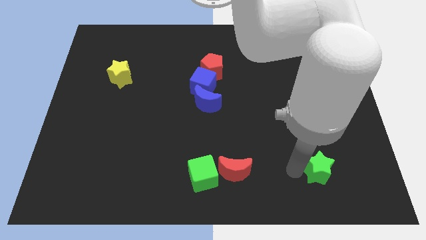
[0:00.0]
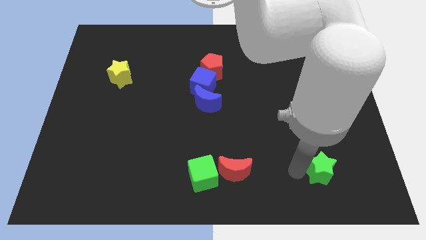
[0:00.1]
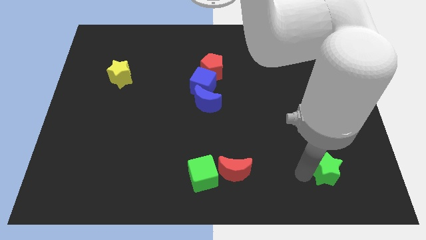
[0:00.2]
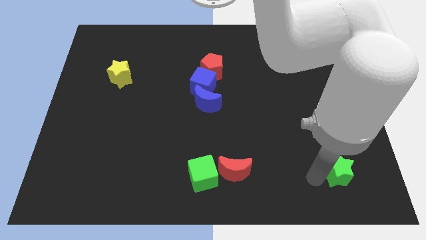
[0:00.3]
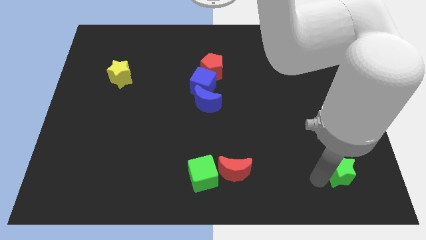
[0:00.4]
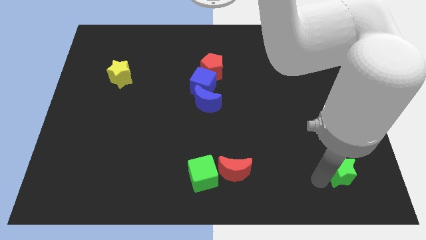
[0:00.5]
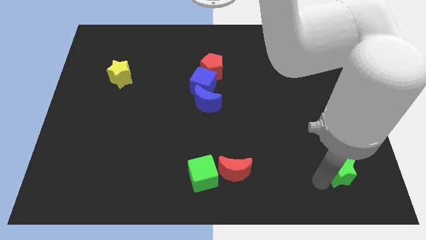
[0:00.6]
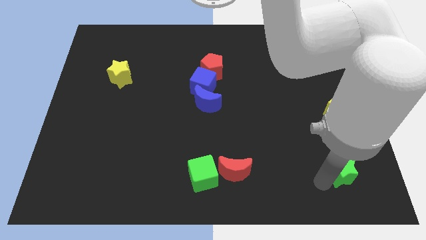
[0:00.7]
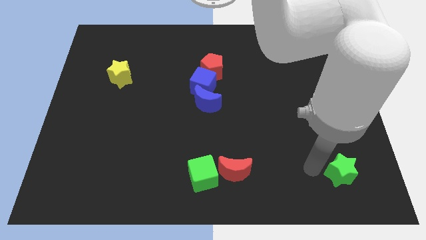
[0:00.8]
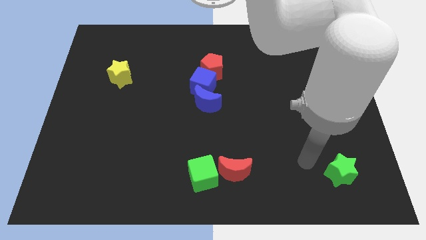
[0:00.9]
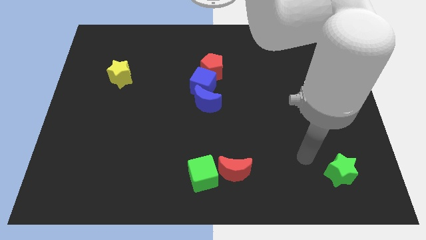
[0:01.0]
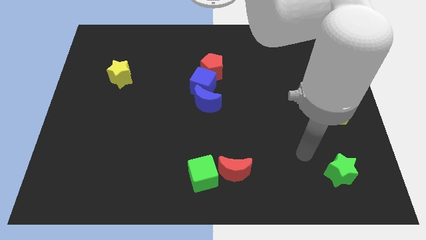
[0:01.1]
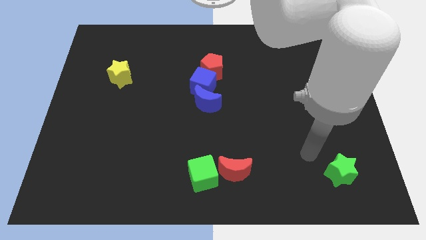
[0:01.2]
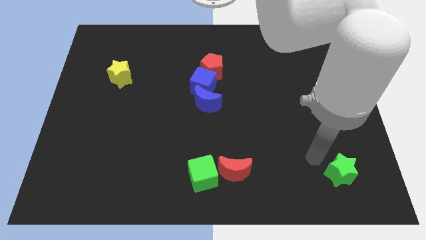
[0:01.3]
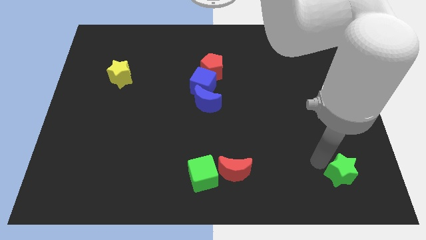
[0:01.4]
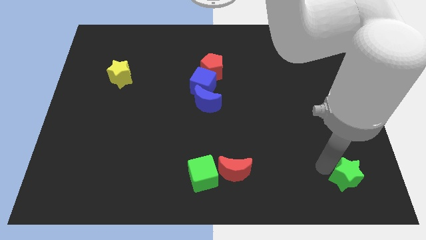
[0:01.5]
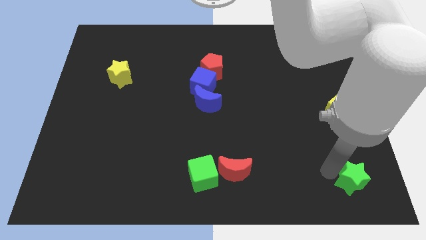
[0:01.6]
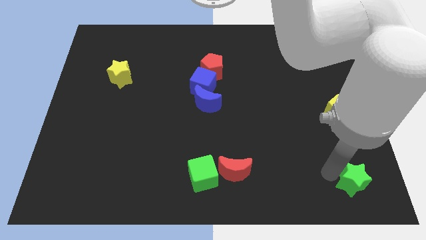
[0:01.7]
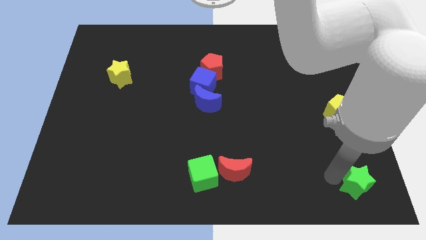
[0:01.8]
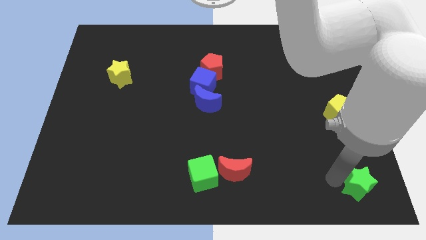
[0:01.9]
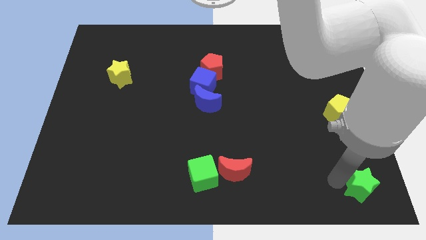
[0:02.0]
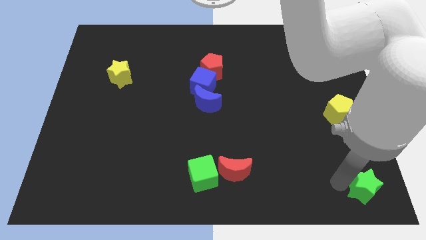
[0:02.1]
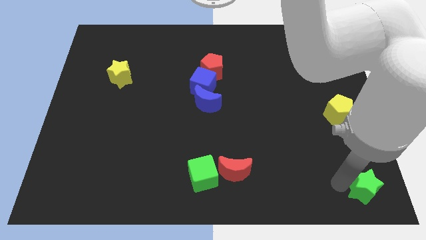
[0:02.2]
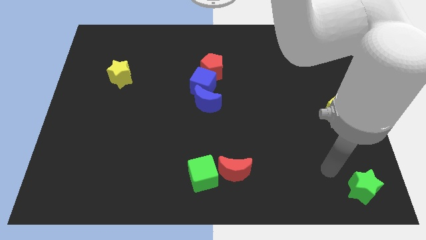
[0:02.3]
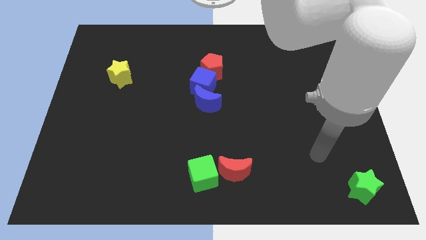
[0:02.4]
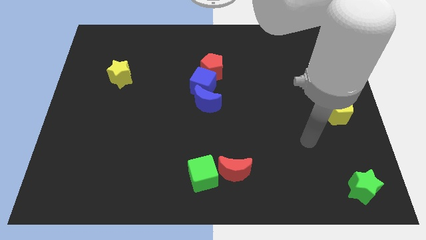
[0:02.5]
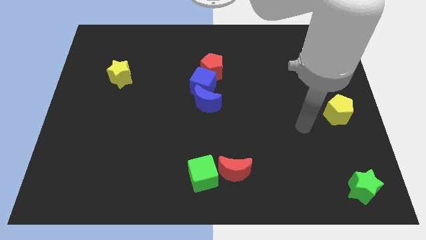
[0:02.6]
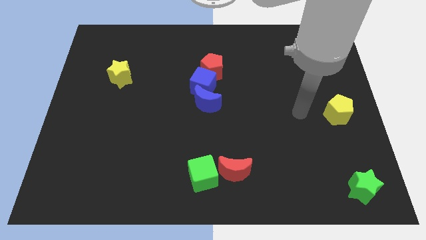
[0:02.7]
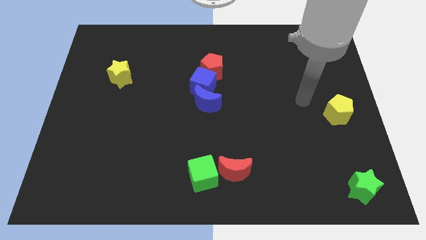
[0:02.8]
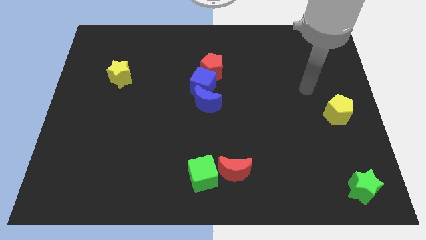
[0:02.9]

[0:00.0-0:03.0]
push green star towards bottom right side of the board

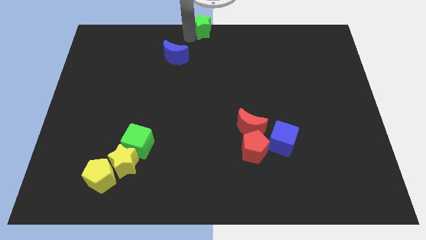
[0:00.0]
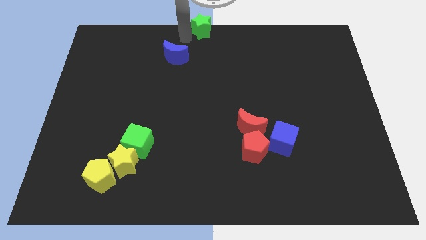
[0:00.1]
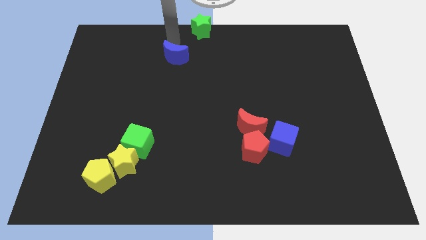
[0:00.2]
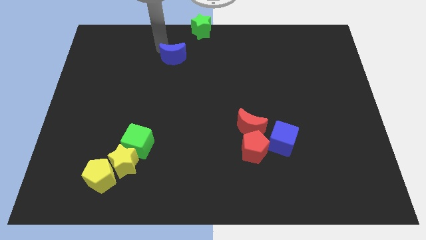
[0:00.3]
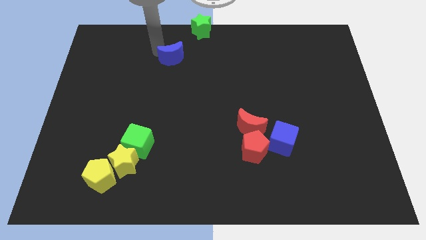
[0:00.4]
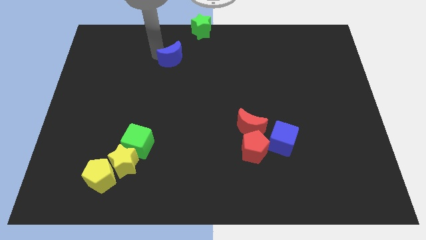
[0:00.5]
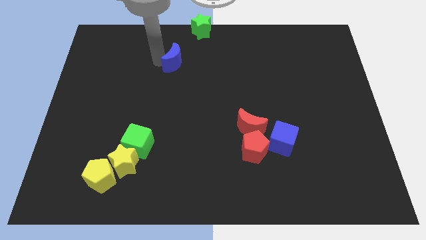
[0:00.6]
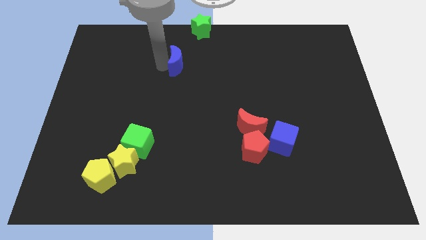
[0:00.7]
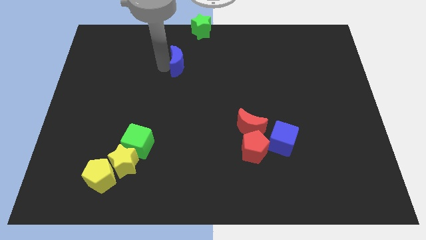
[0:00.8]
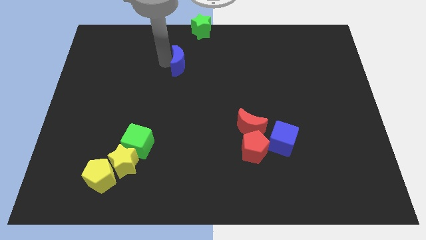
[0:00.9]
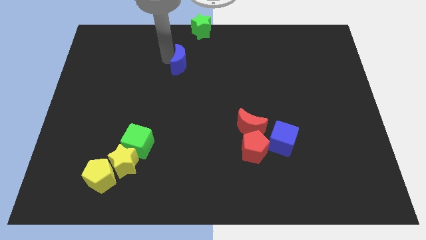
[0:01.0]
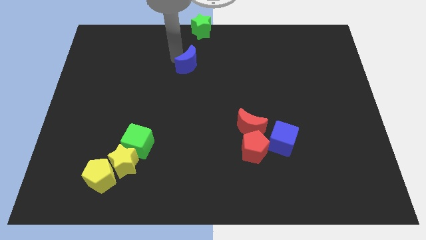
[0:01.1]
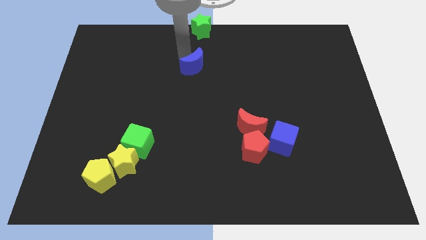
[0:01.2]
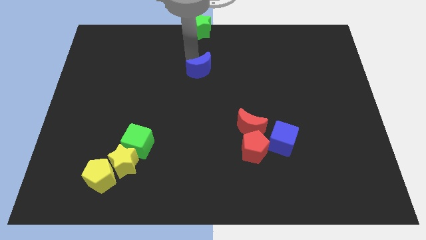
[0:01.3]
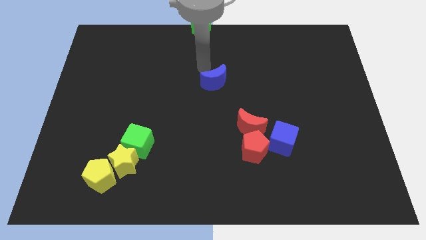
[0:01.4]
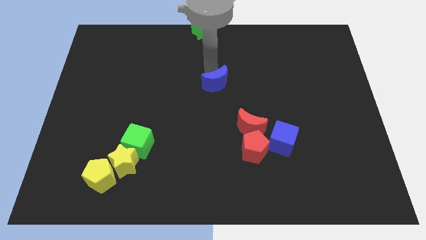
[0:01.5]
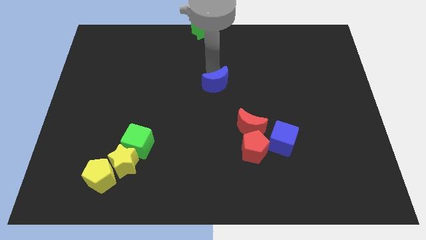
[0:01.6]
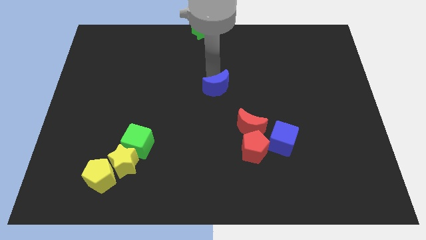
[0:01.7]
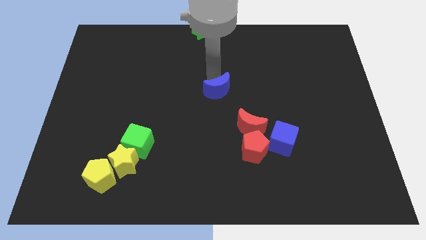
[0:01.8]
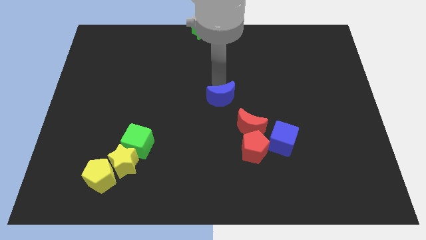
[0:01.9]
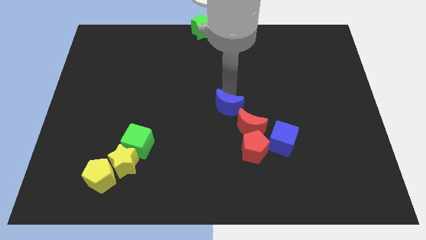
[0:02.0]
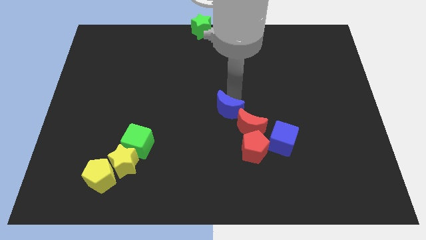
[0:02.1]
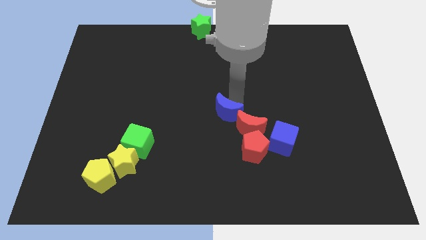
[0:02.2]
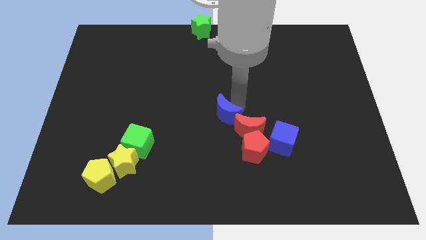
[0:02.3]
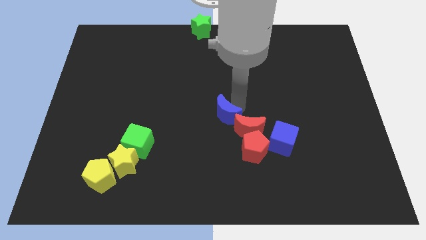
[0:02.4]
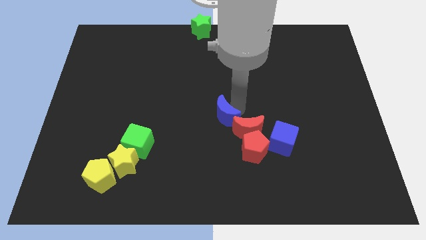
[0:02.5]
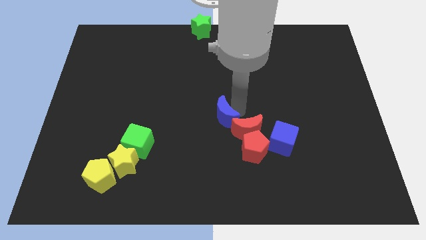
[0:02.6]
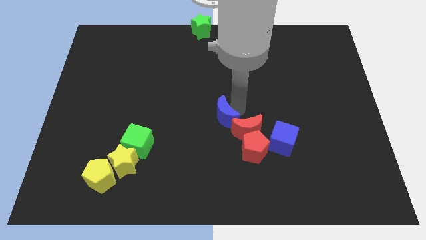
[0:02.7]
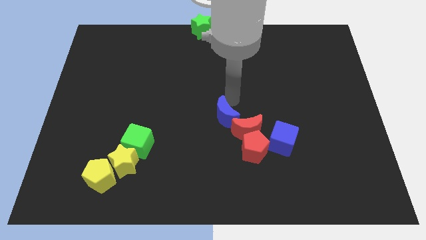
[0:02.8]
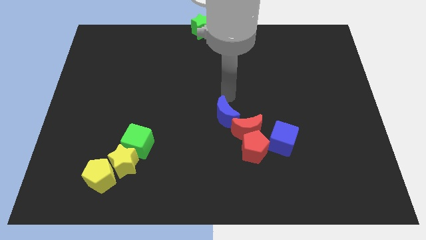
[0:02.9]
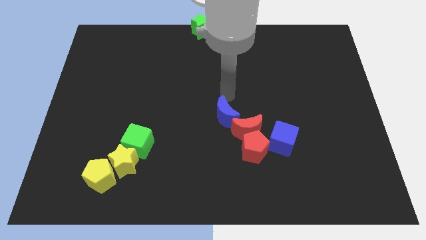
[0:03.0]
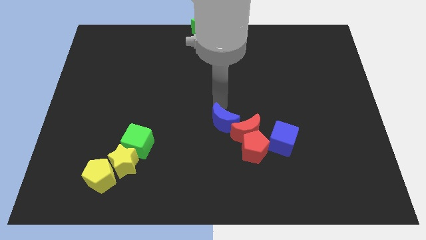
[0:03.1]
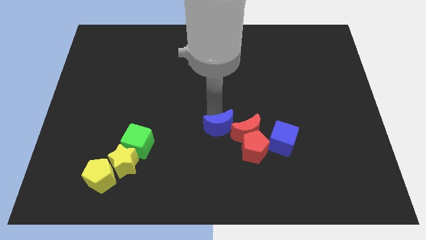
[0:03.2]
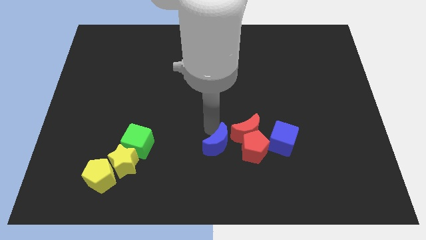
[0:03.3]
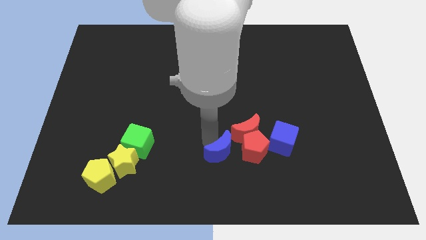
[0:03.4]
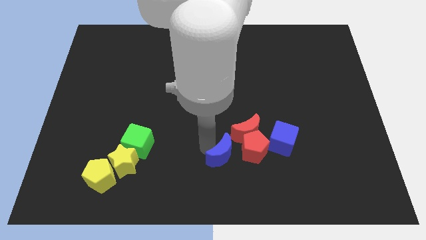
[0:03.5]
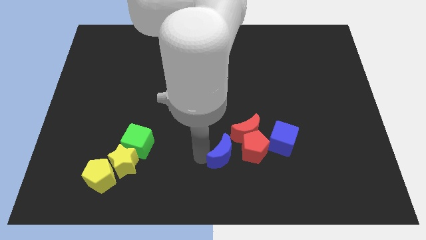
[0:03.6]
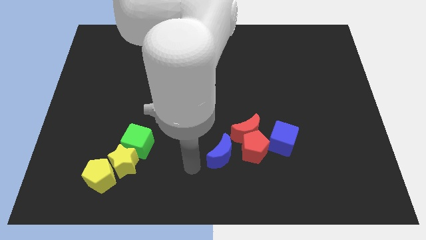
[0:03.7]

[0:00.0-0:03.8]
push the blue crescent to the left of the red pentagon

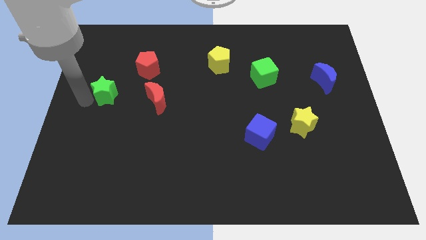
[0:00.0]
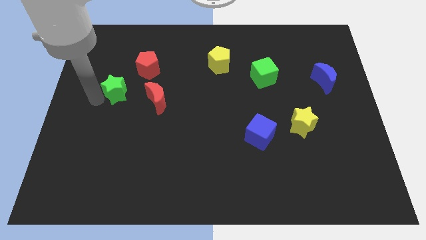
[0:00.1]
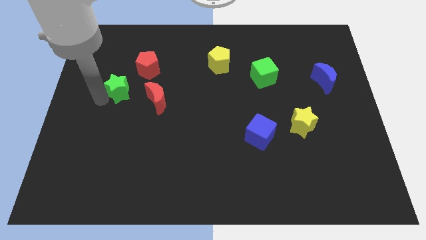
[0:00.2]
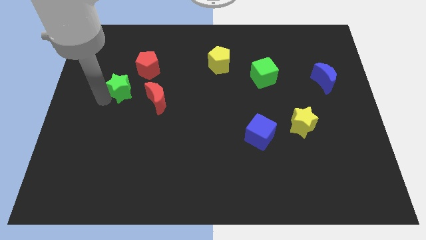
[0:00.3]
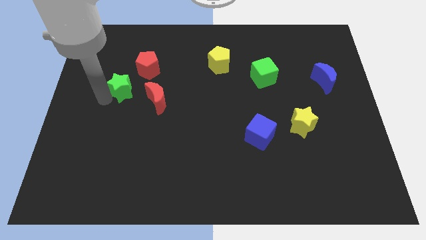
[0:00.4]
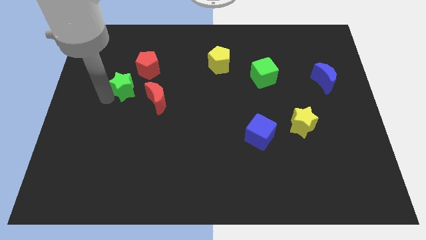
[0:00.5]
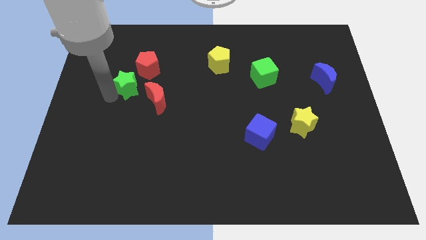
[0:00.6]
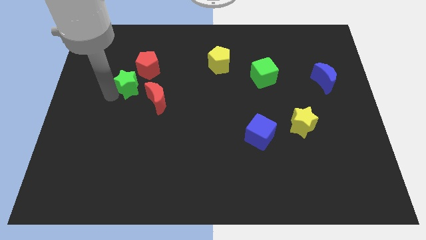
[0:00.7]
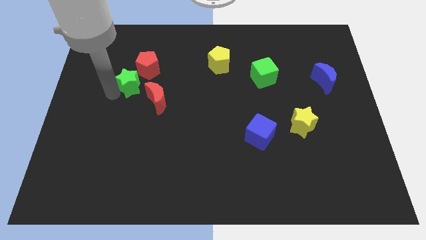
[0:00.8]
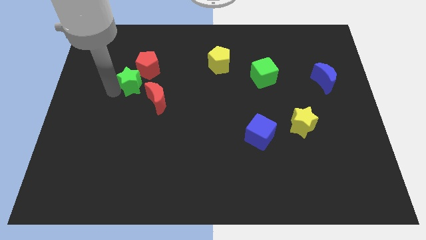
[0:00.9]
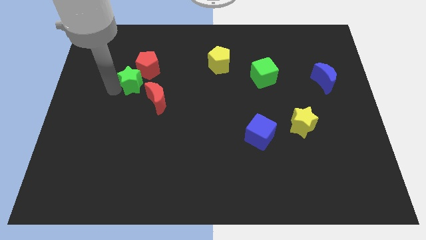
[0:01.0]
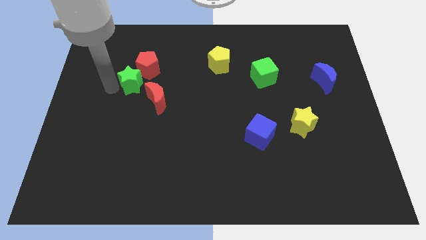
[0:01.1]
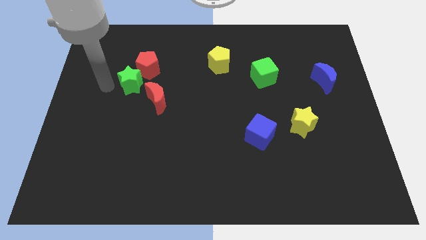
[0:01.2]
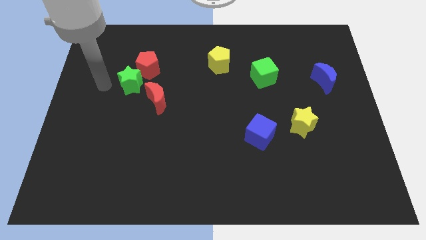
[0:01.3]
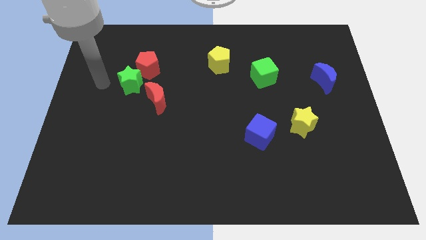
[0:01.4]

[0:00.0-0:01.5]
push green star into red pentagon

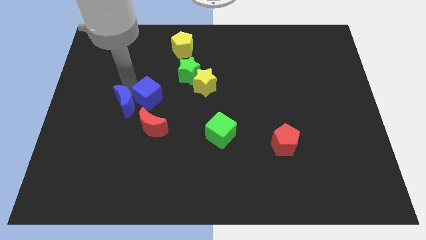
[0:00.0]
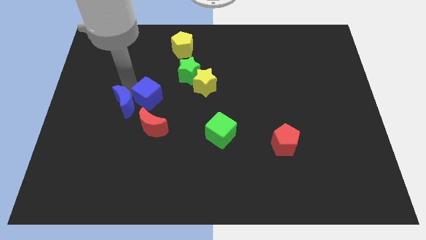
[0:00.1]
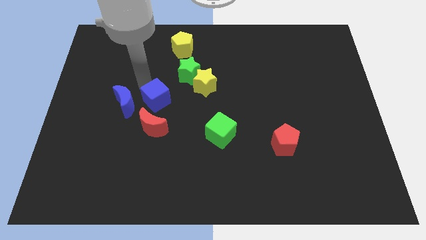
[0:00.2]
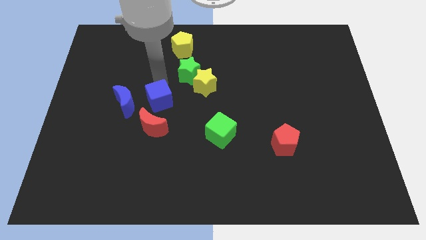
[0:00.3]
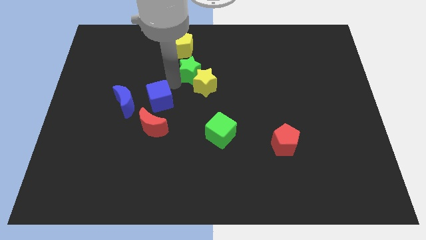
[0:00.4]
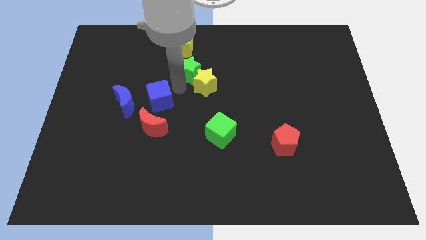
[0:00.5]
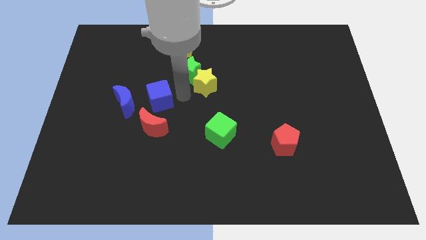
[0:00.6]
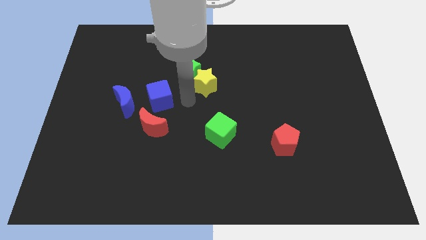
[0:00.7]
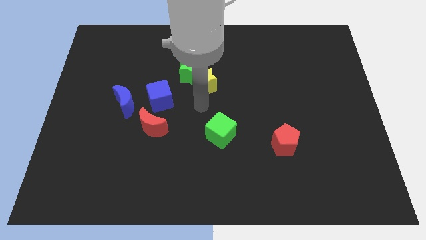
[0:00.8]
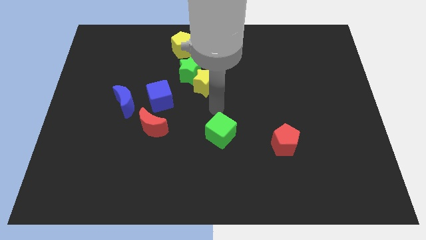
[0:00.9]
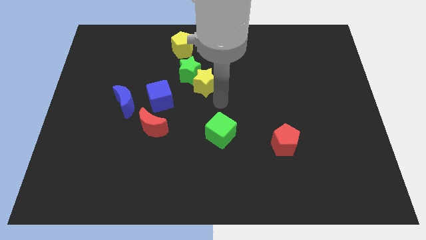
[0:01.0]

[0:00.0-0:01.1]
place the blue cube above the red moon
